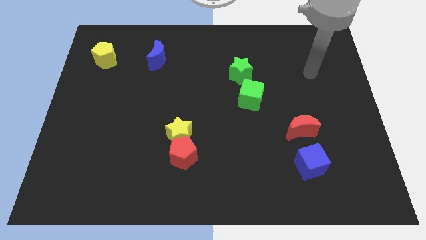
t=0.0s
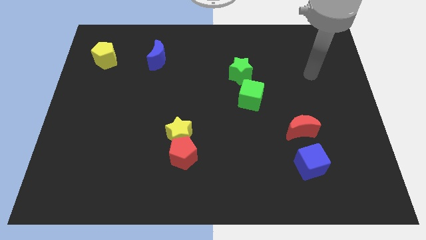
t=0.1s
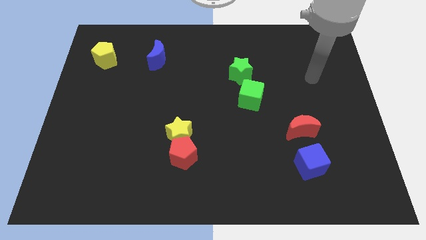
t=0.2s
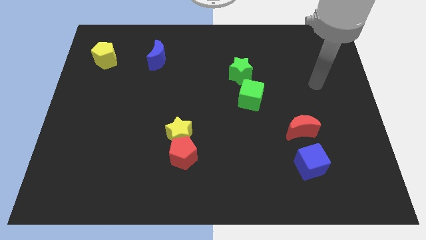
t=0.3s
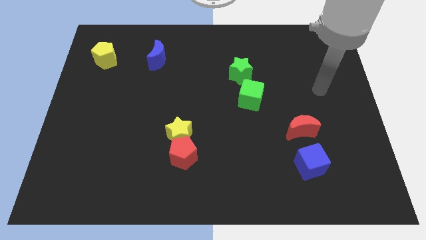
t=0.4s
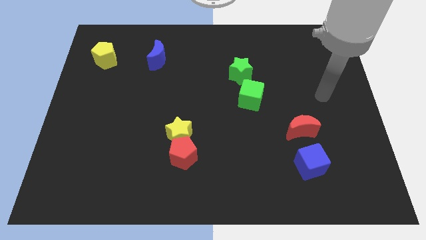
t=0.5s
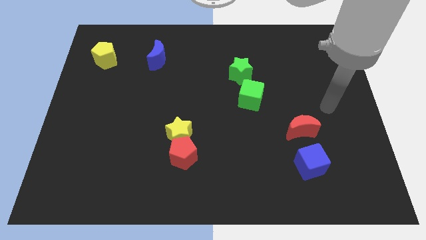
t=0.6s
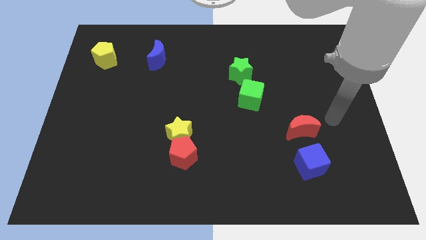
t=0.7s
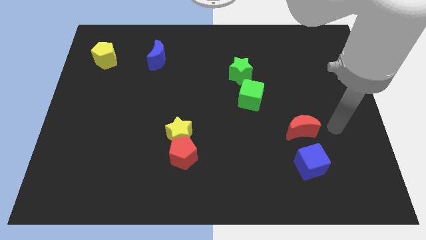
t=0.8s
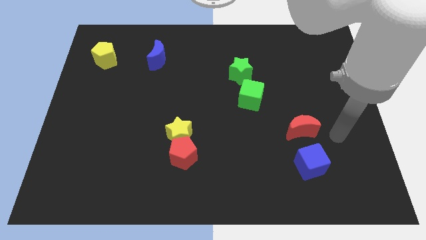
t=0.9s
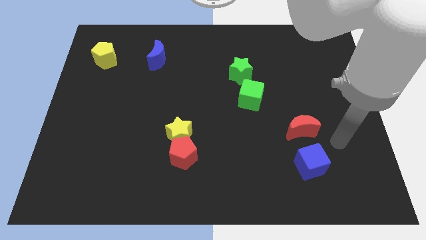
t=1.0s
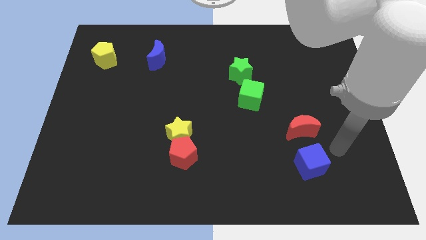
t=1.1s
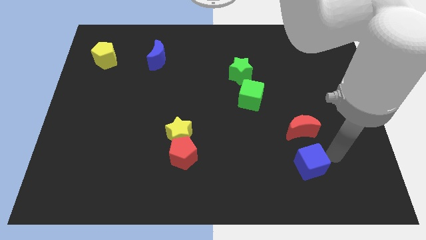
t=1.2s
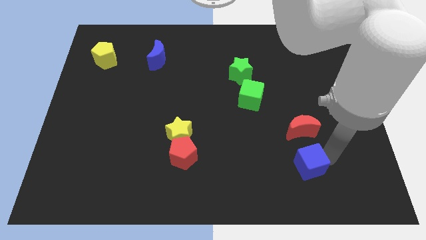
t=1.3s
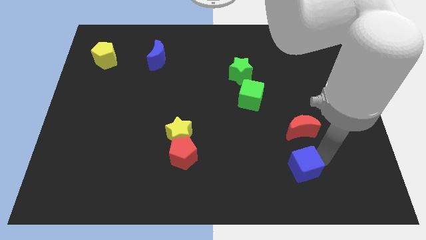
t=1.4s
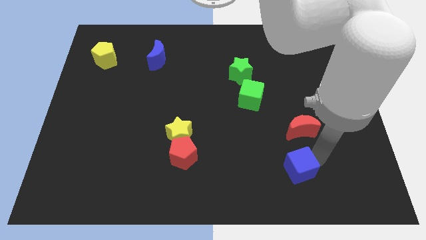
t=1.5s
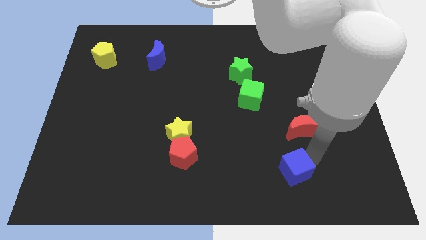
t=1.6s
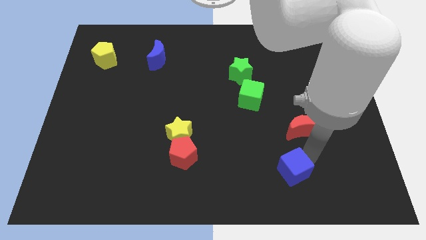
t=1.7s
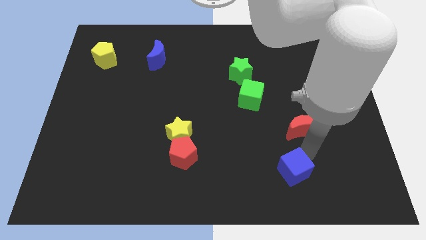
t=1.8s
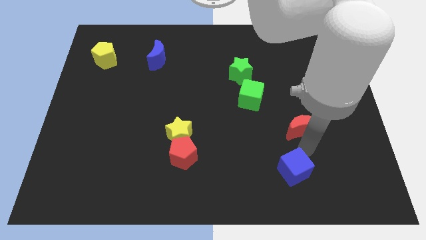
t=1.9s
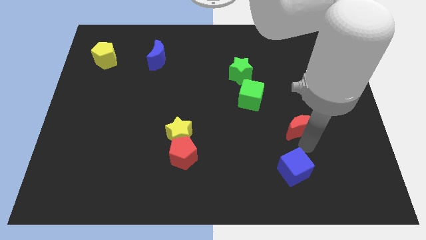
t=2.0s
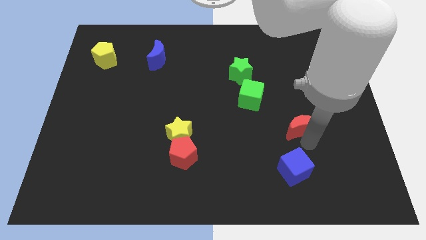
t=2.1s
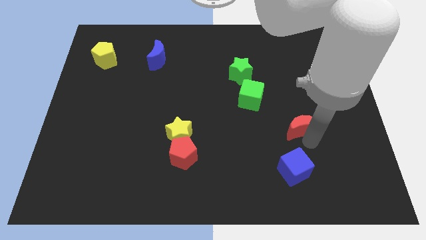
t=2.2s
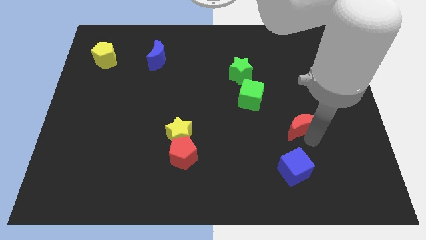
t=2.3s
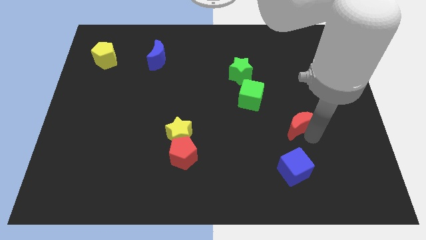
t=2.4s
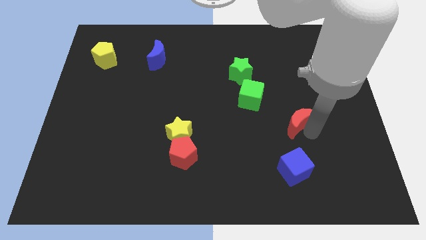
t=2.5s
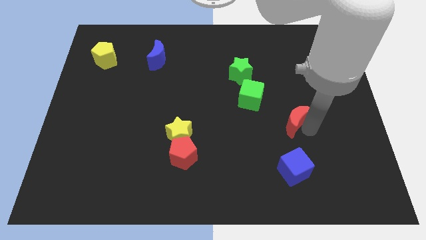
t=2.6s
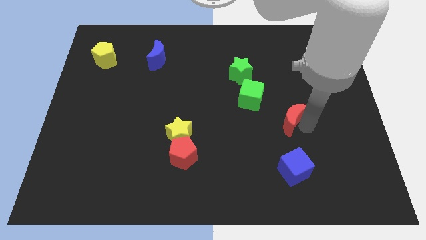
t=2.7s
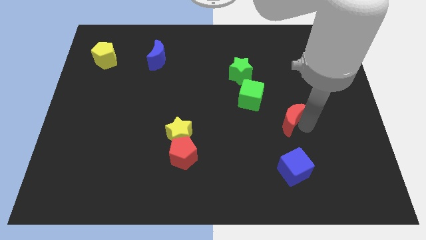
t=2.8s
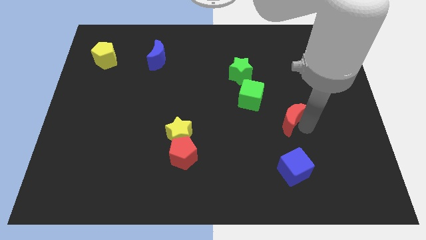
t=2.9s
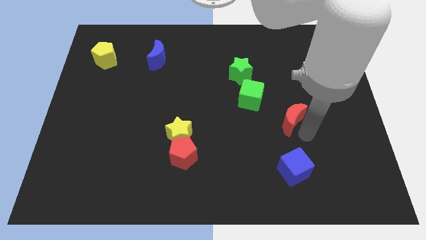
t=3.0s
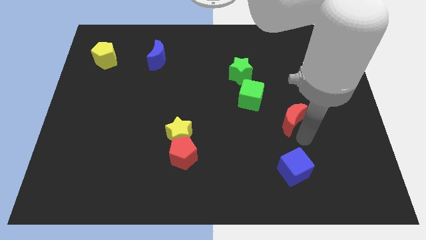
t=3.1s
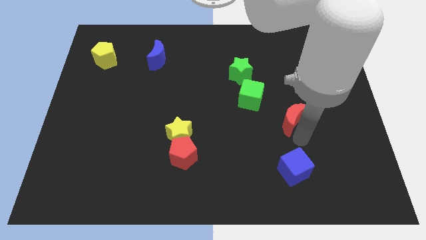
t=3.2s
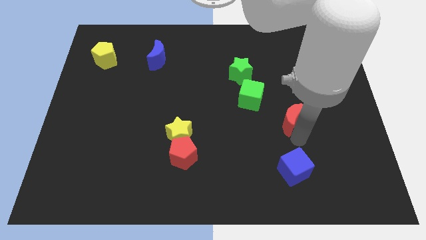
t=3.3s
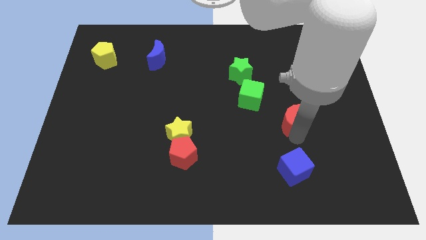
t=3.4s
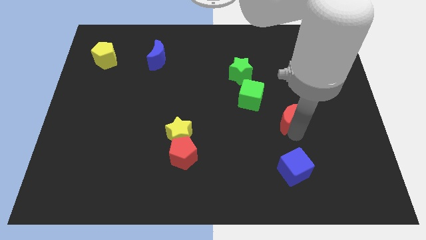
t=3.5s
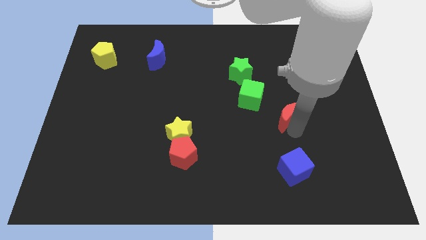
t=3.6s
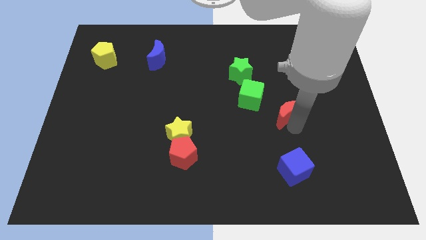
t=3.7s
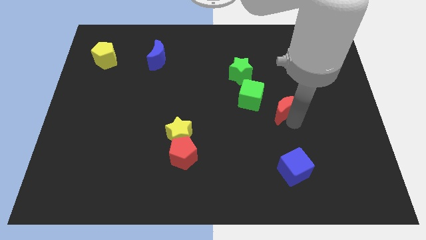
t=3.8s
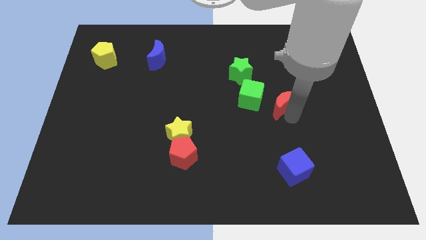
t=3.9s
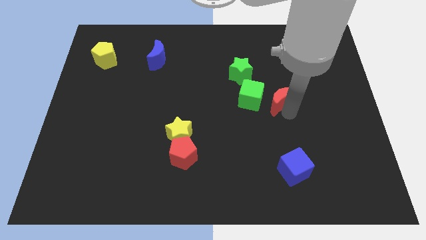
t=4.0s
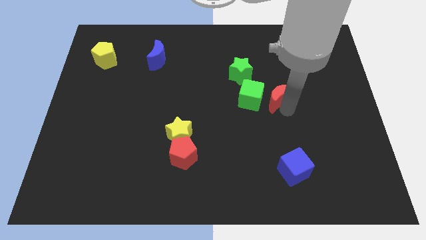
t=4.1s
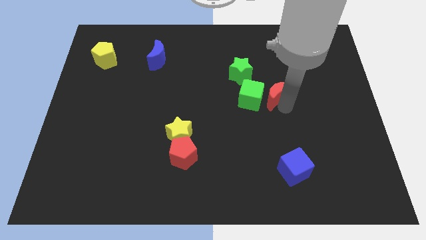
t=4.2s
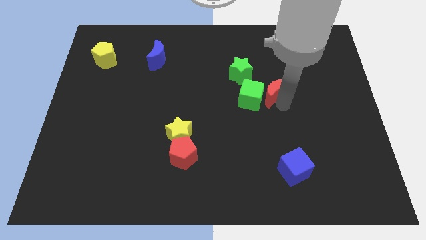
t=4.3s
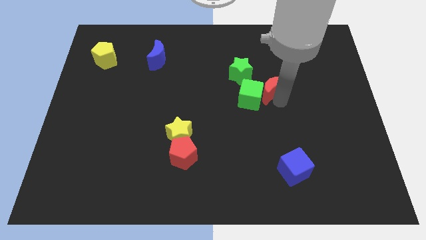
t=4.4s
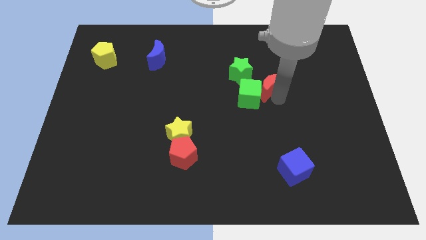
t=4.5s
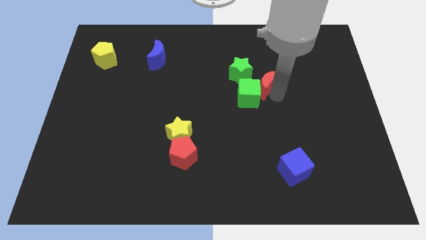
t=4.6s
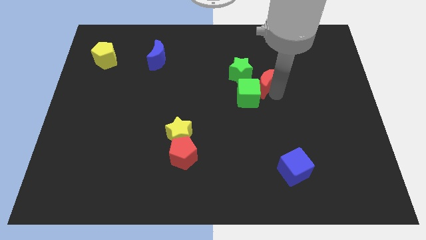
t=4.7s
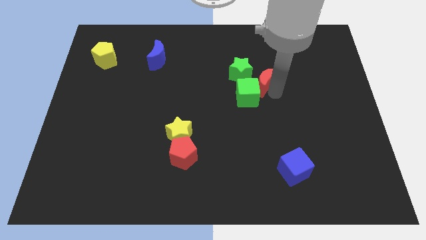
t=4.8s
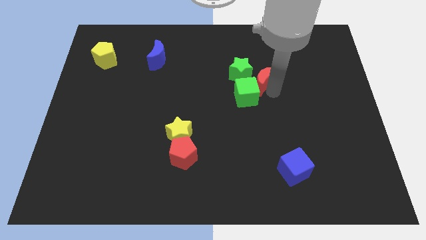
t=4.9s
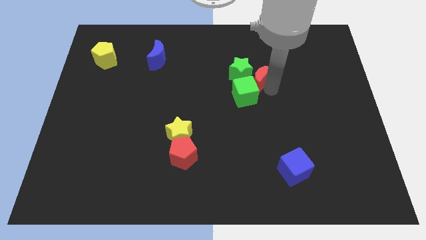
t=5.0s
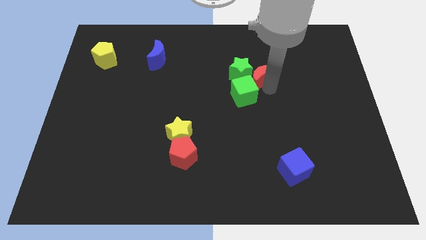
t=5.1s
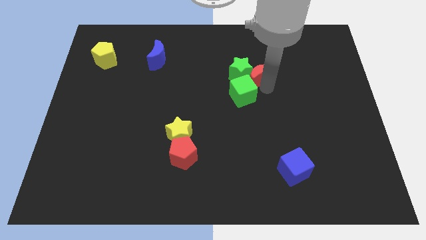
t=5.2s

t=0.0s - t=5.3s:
move the red moon close to the green star

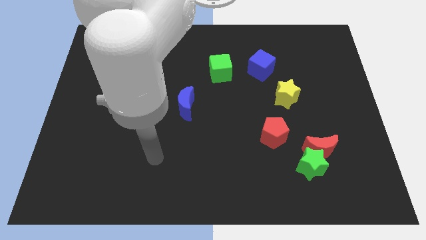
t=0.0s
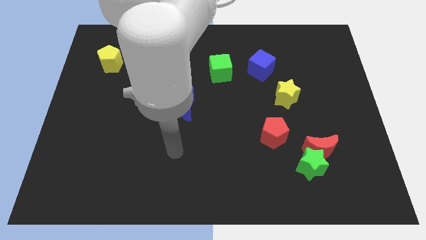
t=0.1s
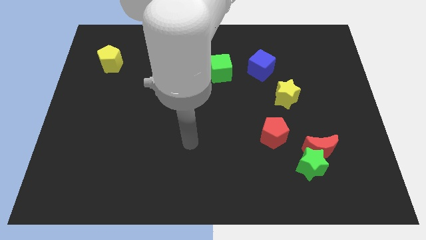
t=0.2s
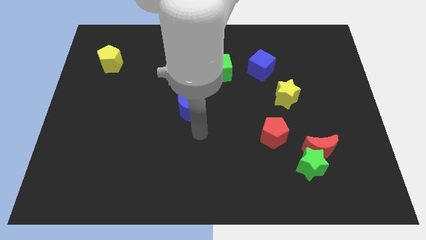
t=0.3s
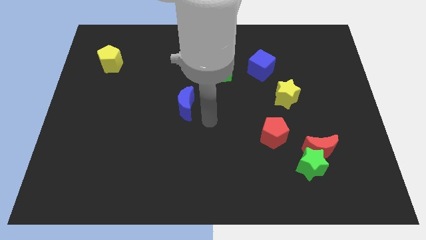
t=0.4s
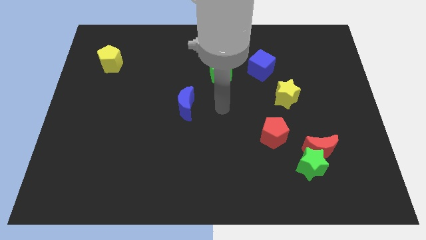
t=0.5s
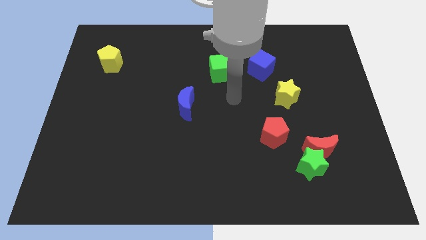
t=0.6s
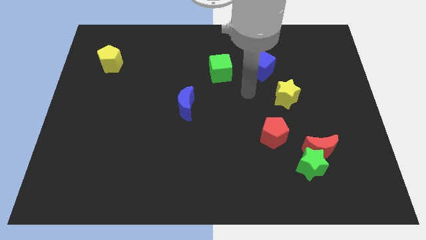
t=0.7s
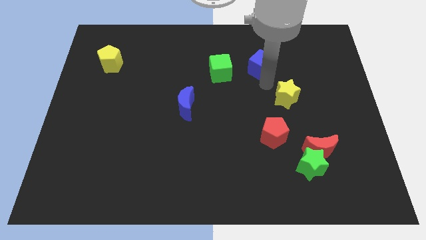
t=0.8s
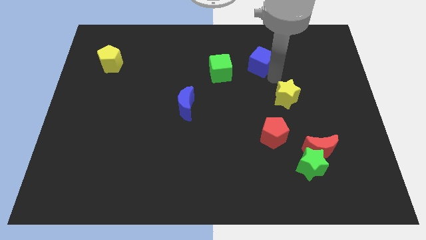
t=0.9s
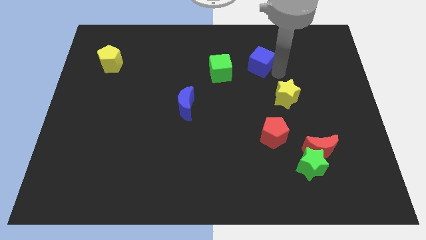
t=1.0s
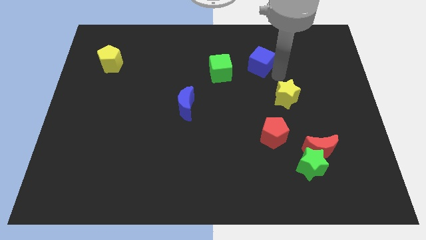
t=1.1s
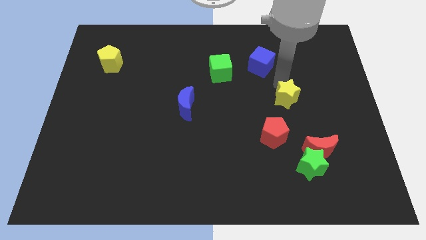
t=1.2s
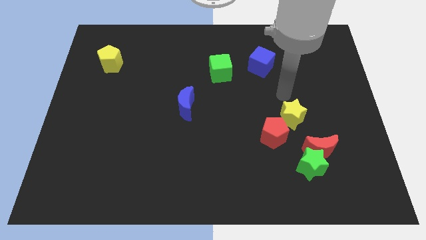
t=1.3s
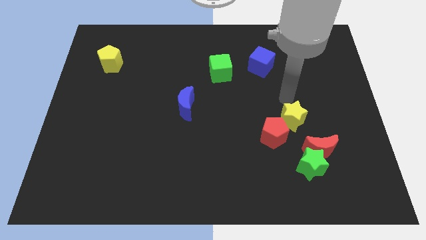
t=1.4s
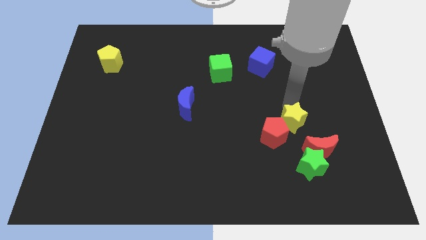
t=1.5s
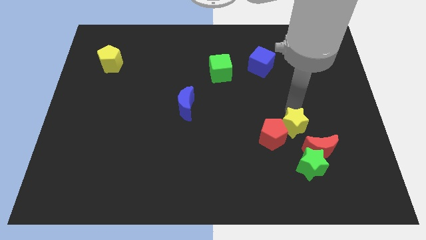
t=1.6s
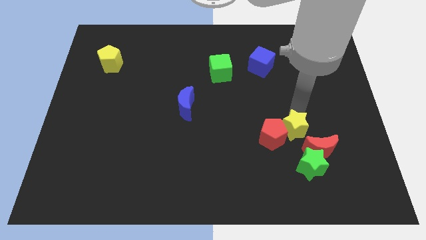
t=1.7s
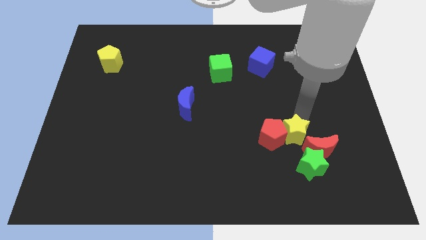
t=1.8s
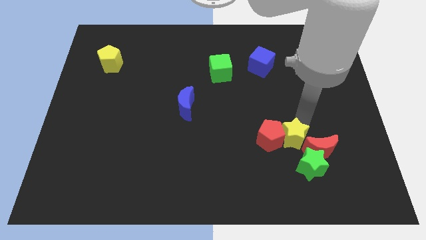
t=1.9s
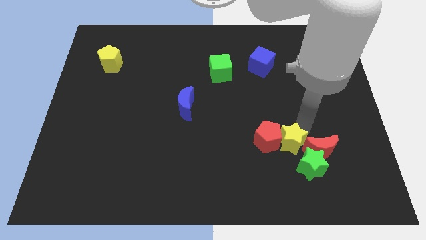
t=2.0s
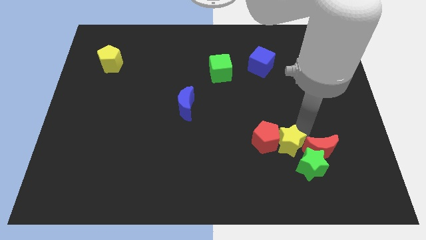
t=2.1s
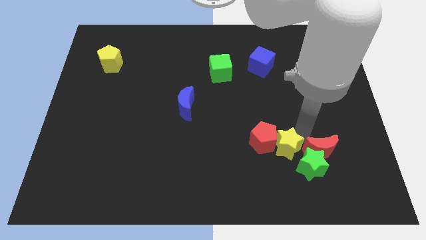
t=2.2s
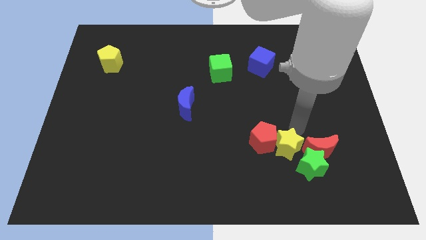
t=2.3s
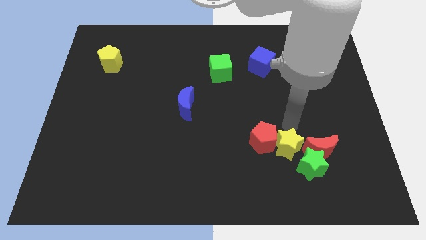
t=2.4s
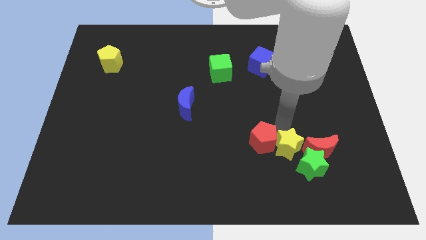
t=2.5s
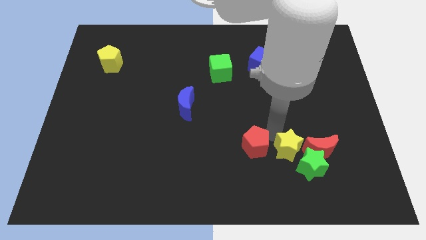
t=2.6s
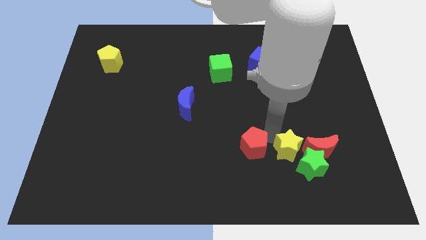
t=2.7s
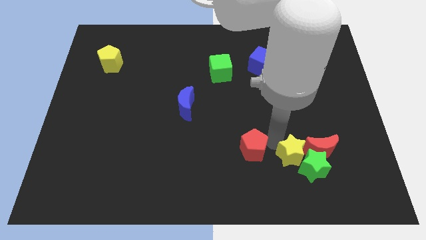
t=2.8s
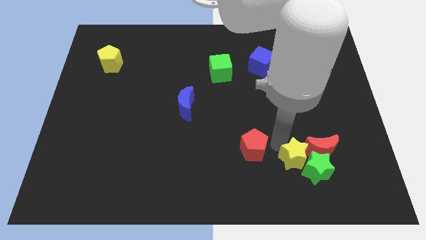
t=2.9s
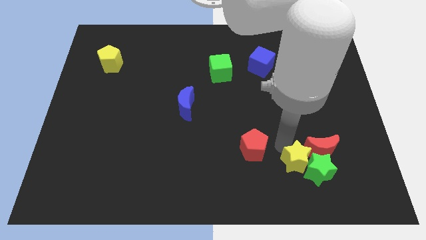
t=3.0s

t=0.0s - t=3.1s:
put the yellow star towards the green star
